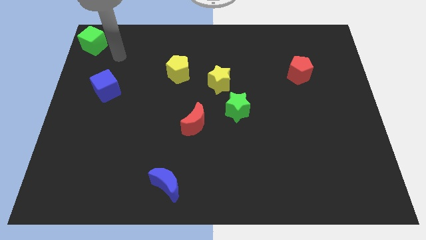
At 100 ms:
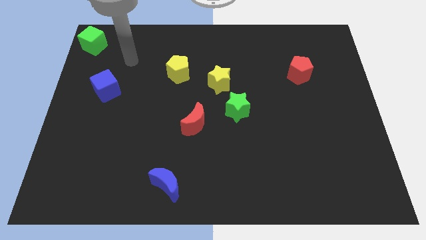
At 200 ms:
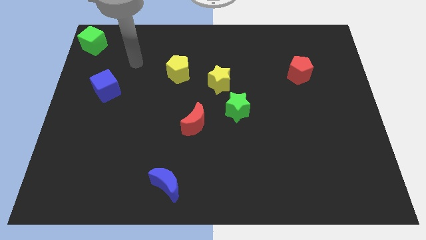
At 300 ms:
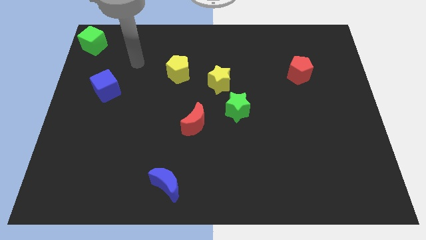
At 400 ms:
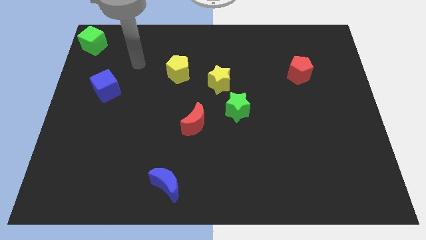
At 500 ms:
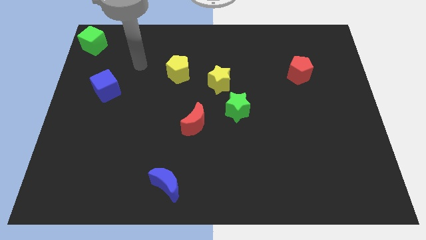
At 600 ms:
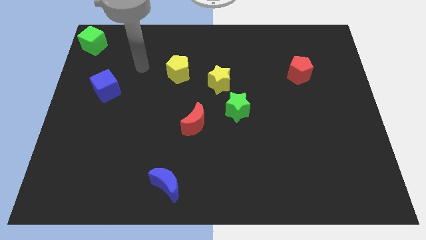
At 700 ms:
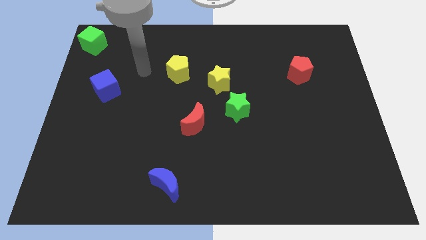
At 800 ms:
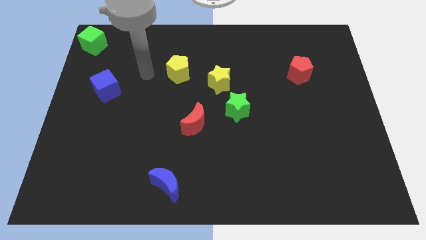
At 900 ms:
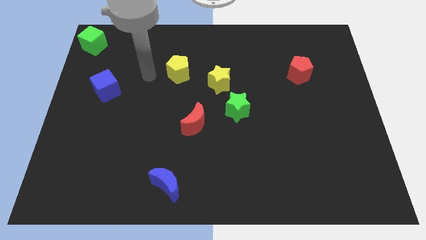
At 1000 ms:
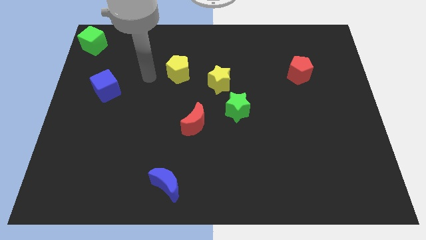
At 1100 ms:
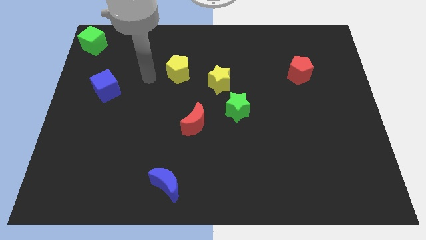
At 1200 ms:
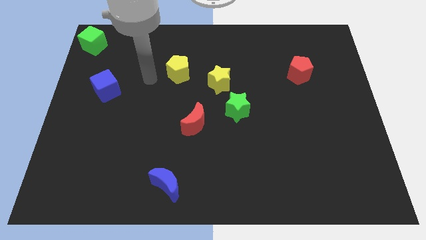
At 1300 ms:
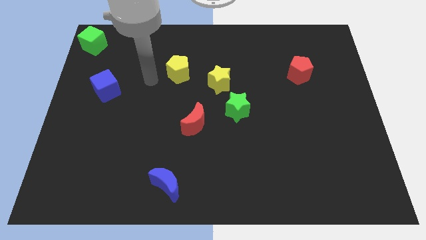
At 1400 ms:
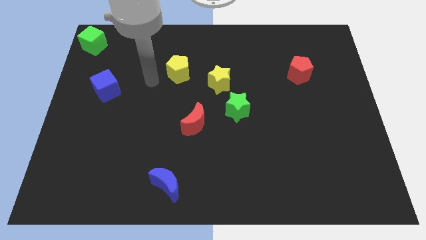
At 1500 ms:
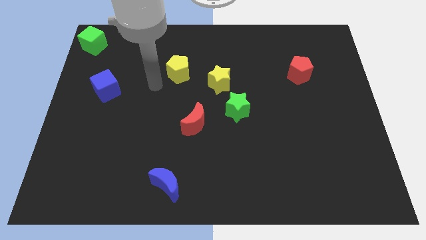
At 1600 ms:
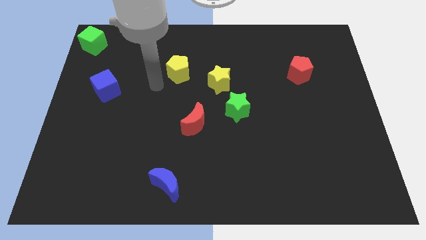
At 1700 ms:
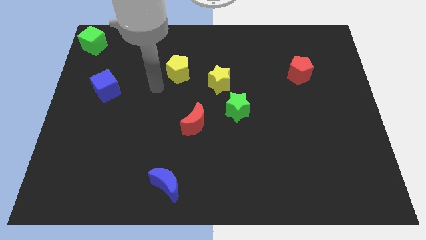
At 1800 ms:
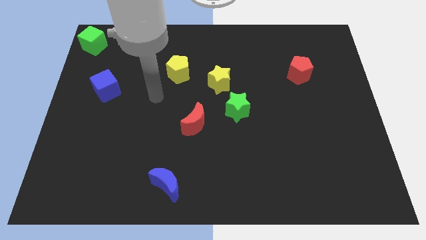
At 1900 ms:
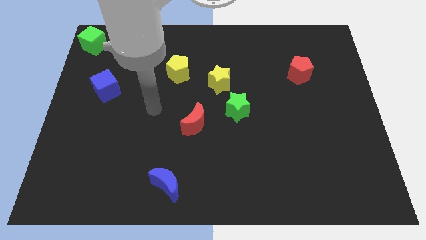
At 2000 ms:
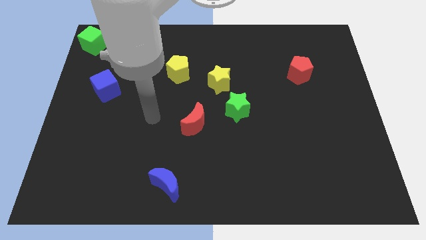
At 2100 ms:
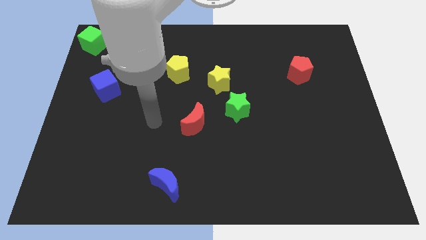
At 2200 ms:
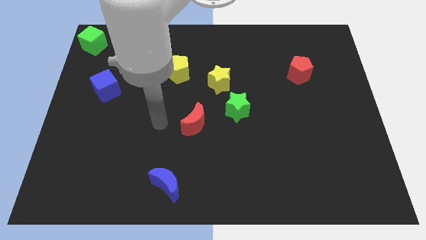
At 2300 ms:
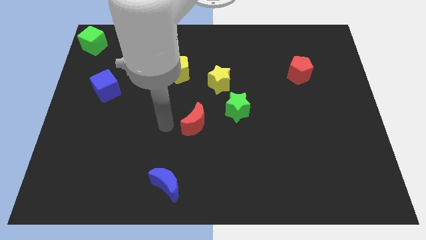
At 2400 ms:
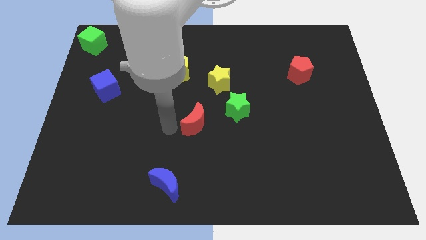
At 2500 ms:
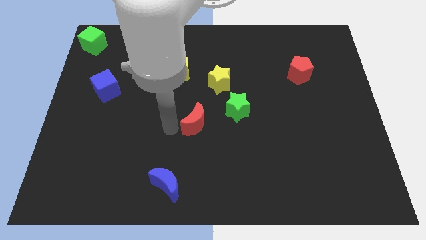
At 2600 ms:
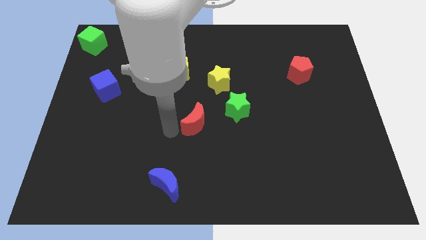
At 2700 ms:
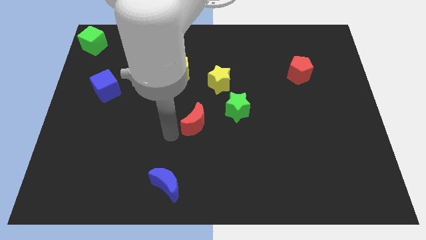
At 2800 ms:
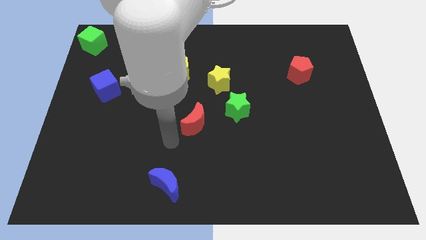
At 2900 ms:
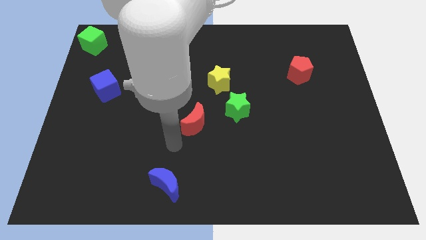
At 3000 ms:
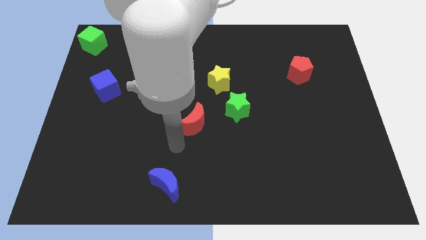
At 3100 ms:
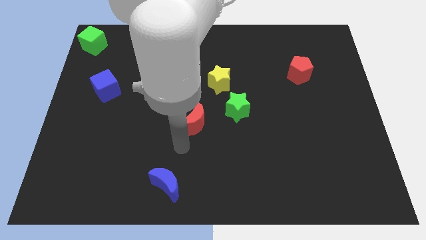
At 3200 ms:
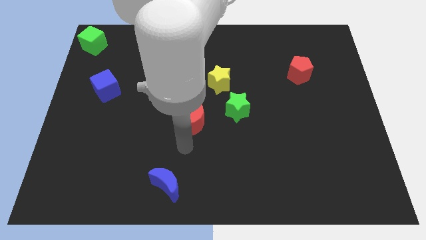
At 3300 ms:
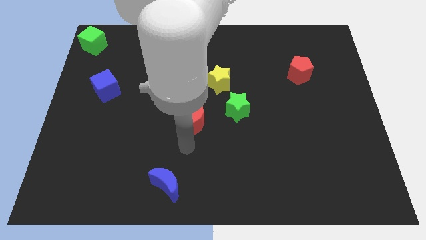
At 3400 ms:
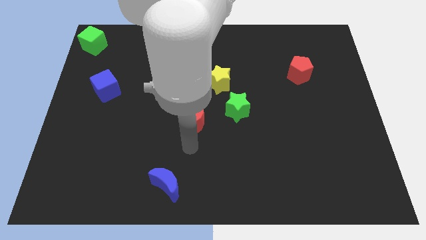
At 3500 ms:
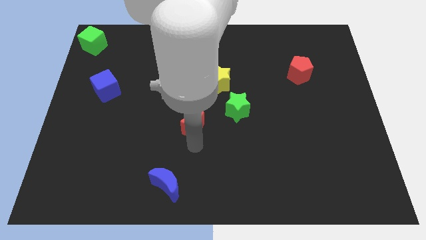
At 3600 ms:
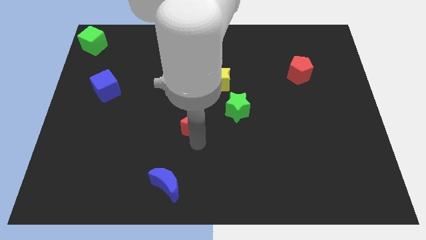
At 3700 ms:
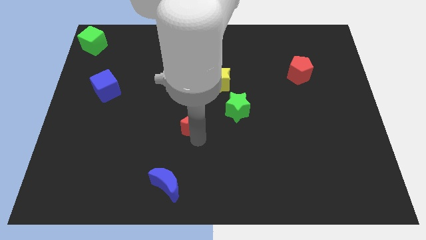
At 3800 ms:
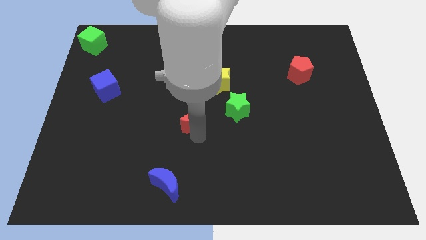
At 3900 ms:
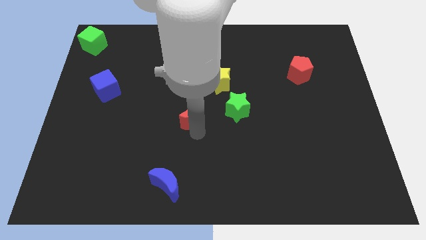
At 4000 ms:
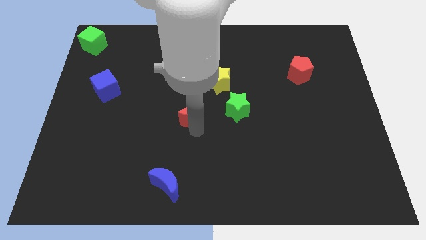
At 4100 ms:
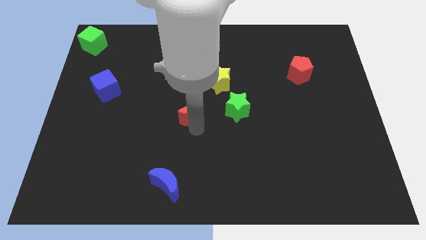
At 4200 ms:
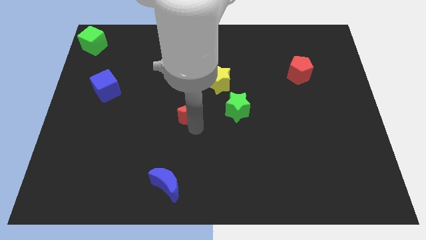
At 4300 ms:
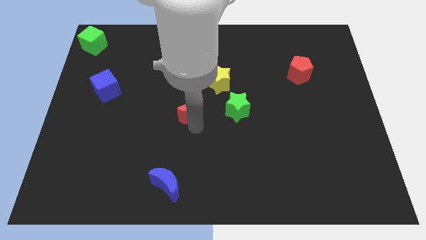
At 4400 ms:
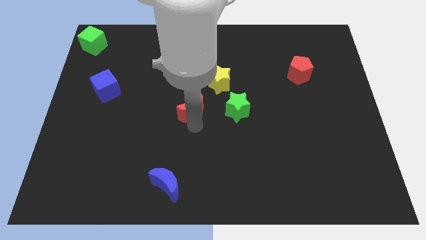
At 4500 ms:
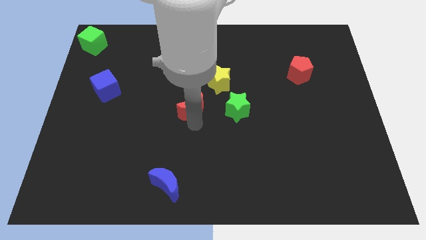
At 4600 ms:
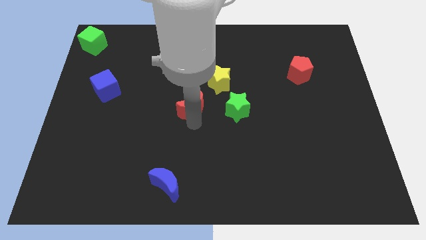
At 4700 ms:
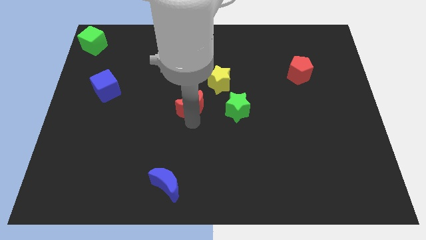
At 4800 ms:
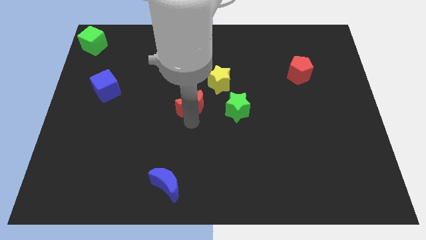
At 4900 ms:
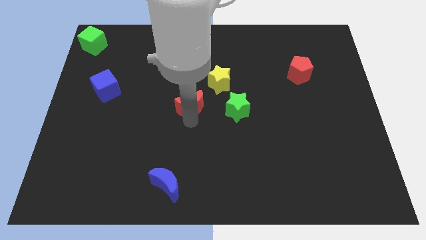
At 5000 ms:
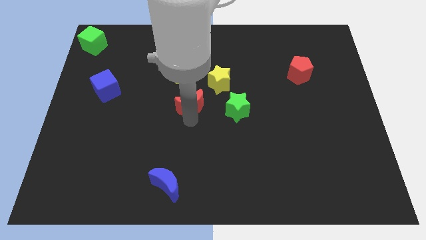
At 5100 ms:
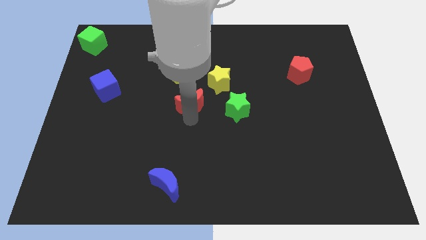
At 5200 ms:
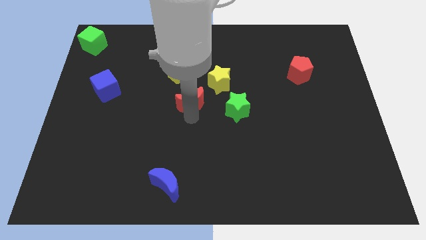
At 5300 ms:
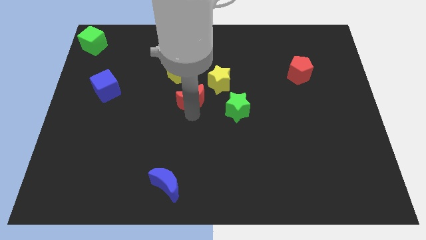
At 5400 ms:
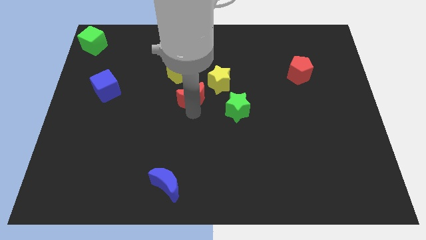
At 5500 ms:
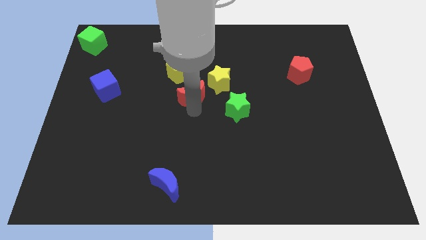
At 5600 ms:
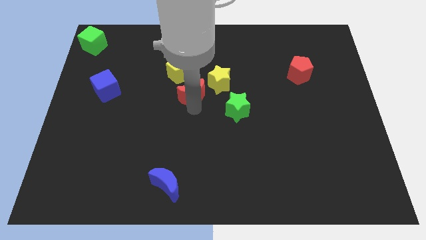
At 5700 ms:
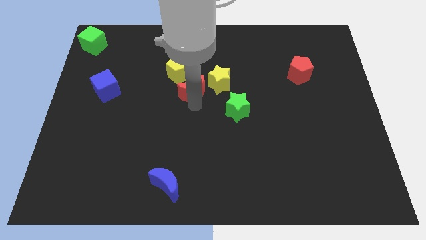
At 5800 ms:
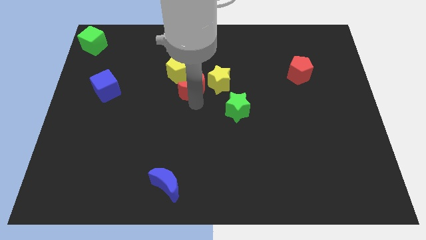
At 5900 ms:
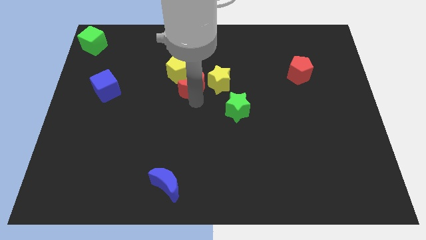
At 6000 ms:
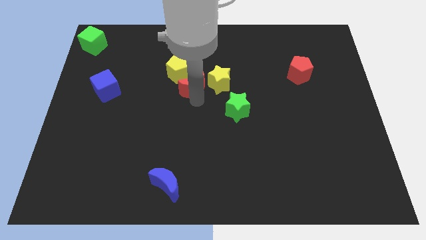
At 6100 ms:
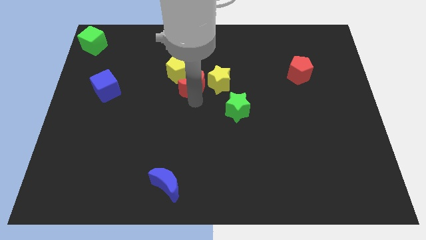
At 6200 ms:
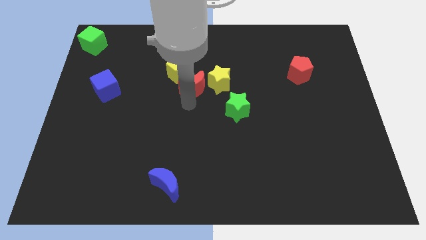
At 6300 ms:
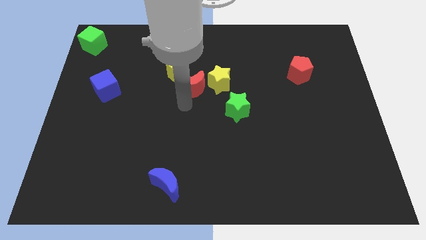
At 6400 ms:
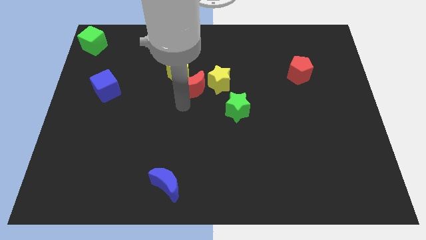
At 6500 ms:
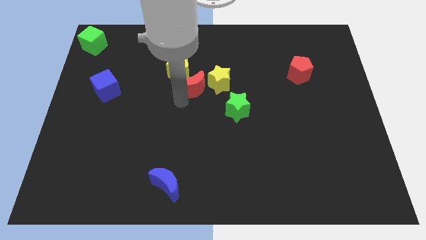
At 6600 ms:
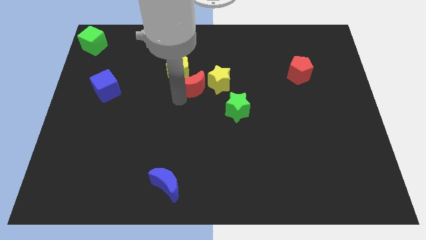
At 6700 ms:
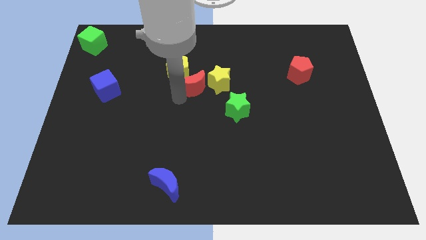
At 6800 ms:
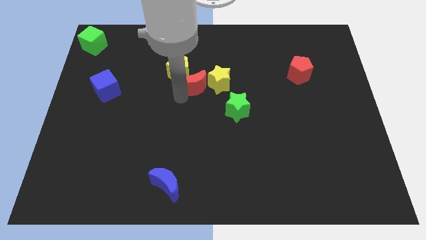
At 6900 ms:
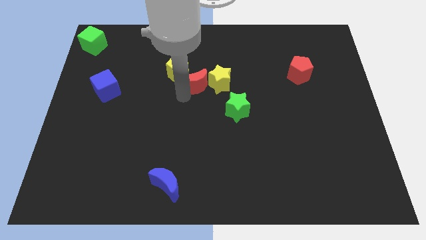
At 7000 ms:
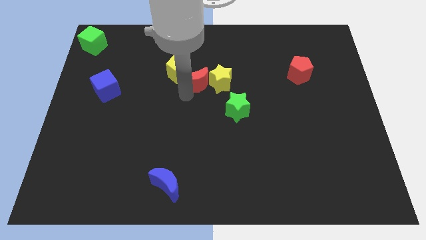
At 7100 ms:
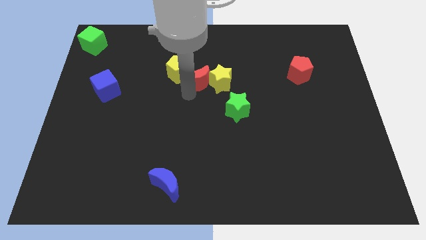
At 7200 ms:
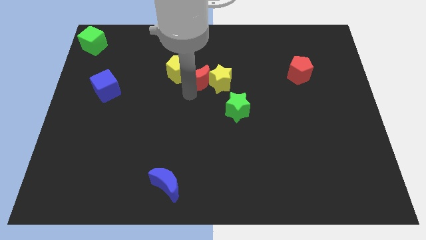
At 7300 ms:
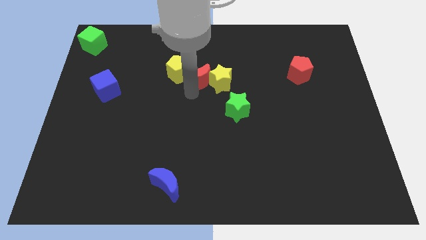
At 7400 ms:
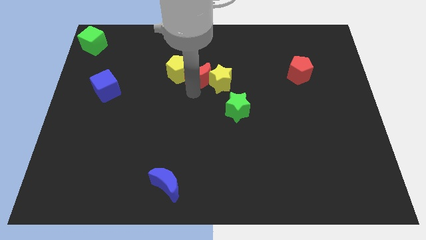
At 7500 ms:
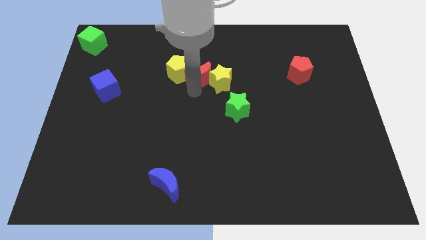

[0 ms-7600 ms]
push the red crescent in between the yellow star and yellow pentagon

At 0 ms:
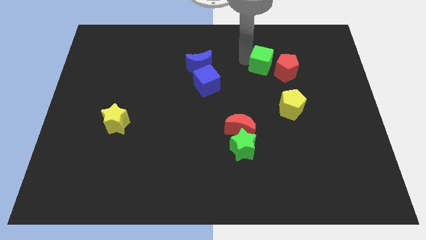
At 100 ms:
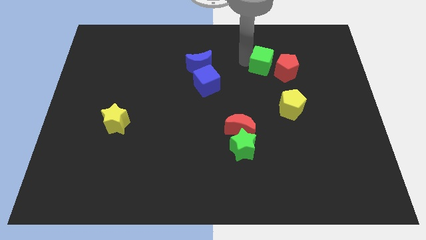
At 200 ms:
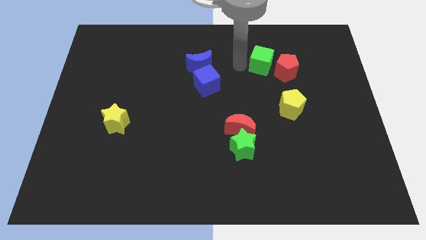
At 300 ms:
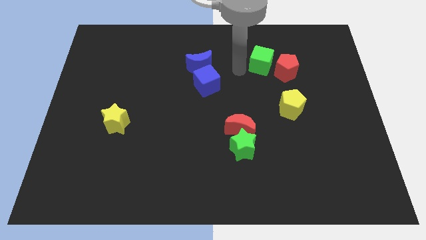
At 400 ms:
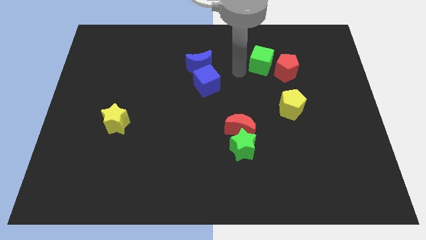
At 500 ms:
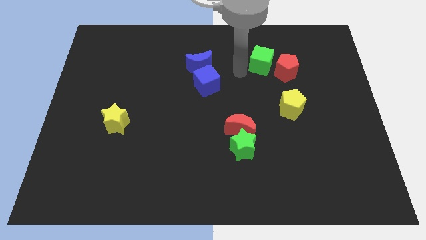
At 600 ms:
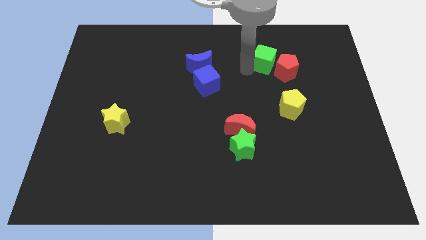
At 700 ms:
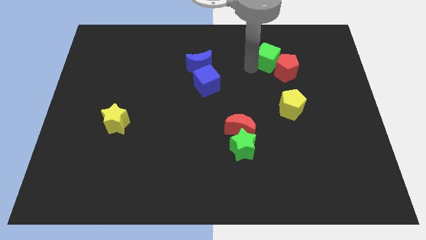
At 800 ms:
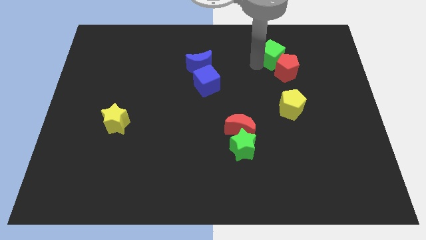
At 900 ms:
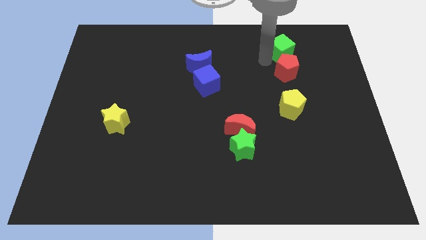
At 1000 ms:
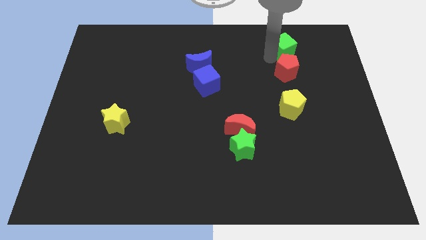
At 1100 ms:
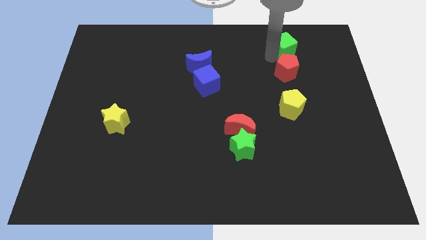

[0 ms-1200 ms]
place the green cube above the red pentagon

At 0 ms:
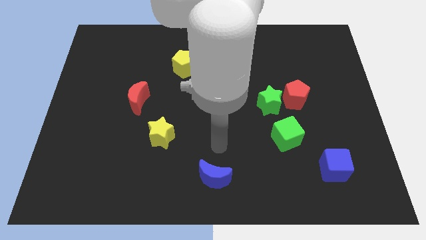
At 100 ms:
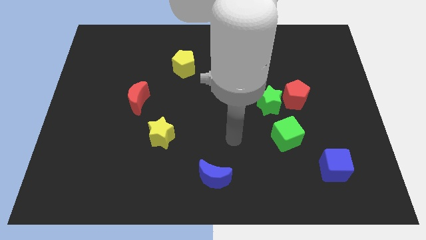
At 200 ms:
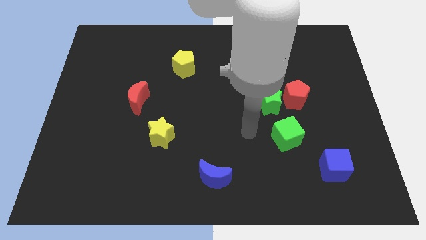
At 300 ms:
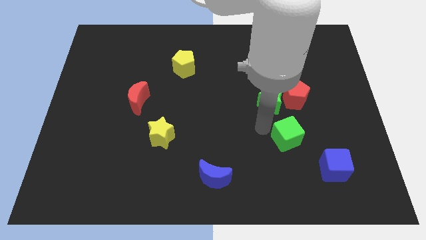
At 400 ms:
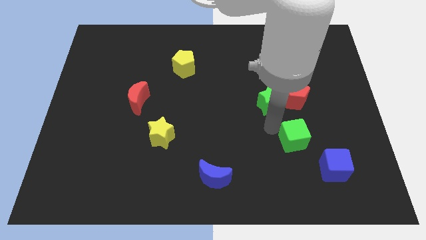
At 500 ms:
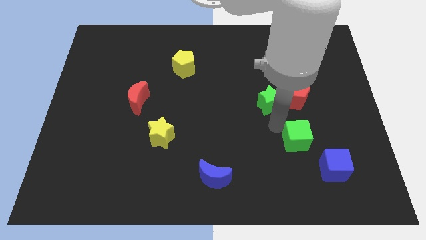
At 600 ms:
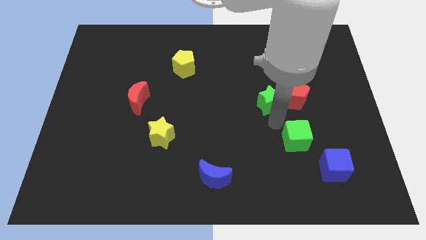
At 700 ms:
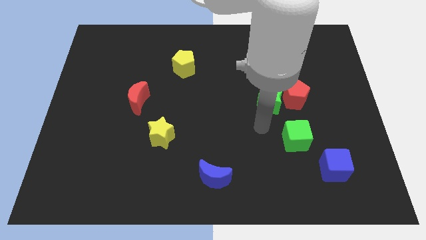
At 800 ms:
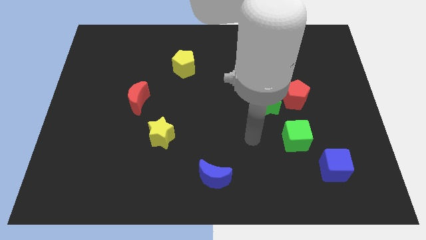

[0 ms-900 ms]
move your arm to the bottom of green star
